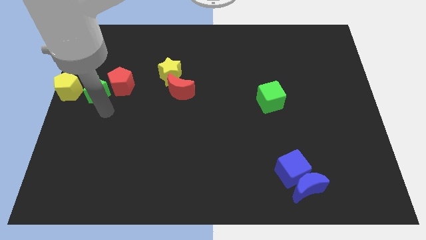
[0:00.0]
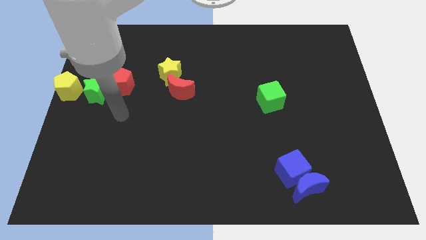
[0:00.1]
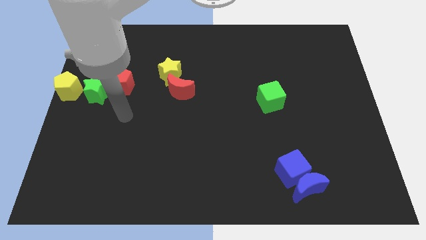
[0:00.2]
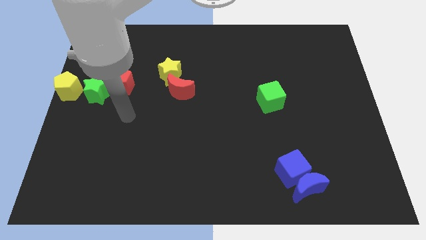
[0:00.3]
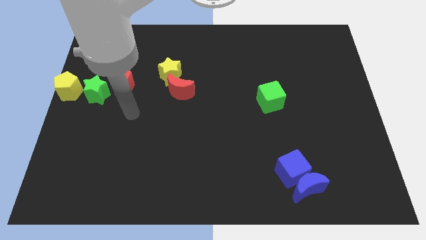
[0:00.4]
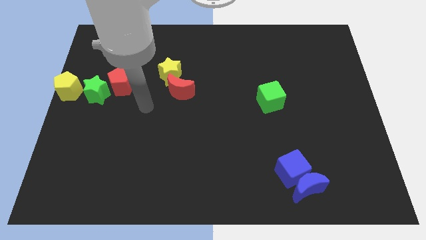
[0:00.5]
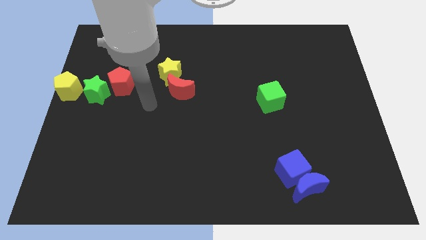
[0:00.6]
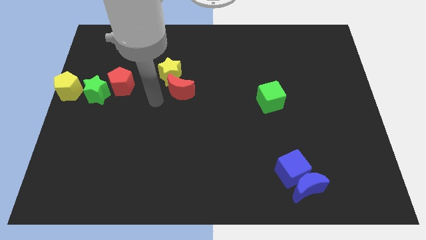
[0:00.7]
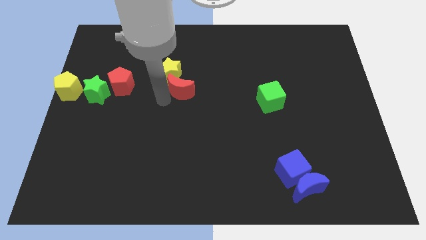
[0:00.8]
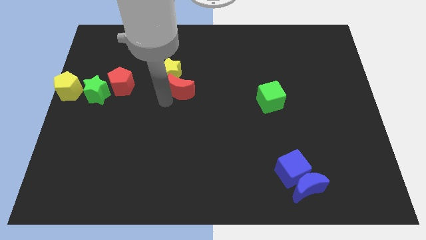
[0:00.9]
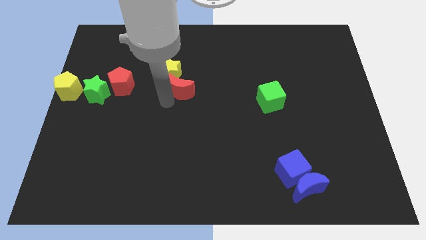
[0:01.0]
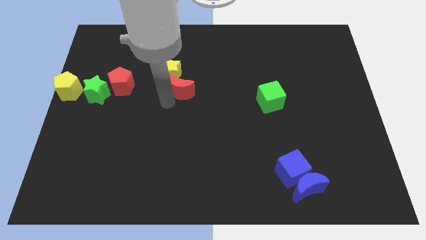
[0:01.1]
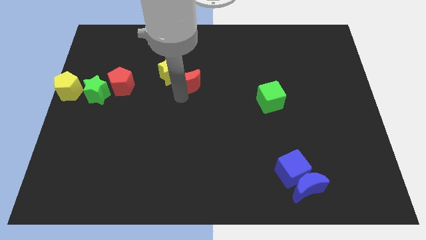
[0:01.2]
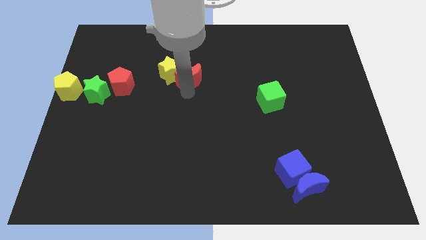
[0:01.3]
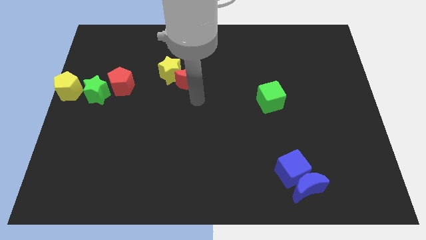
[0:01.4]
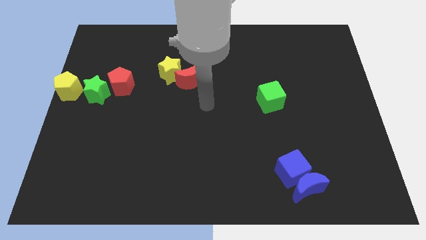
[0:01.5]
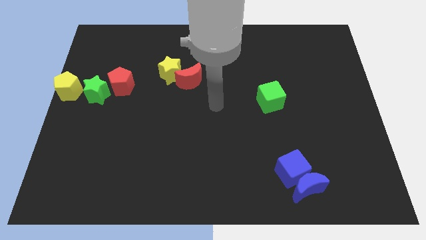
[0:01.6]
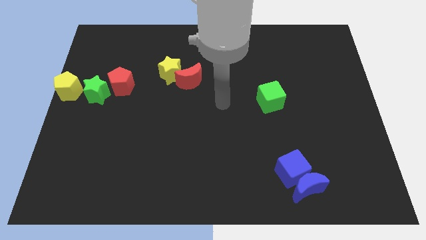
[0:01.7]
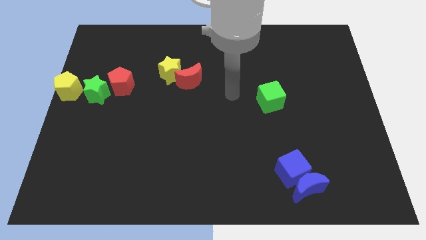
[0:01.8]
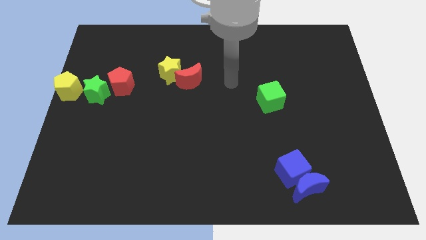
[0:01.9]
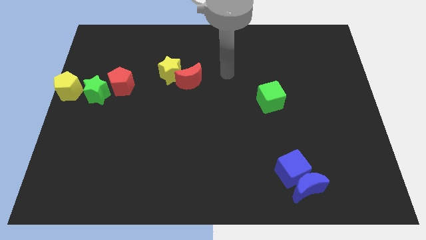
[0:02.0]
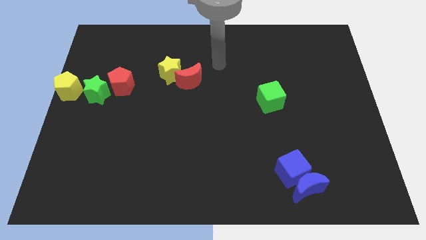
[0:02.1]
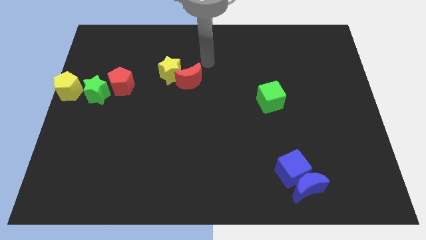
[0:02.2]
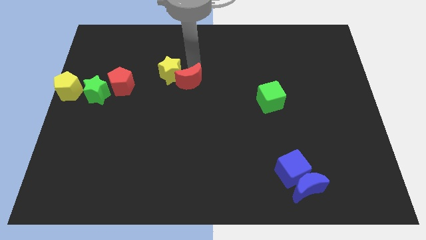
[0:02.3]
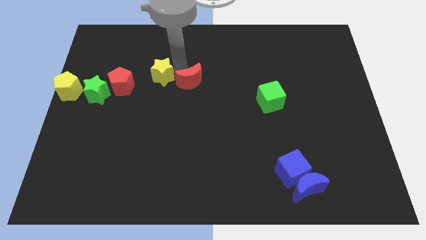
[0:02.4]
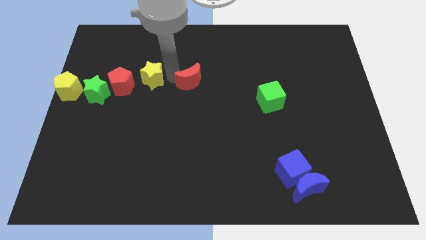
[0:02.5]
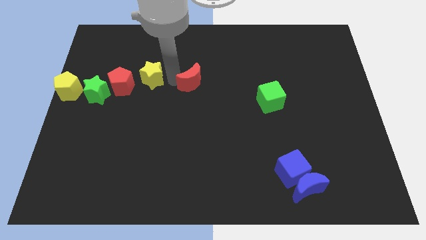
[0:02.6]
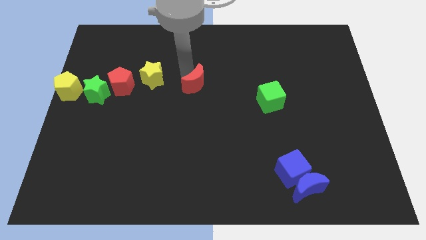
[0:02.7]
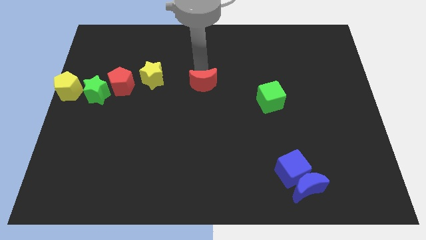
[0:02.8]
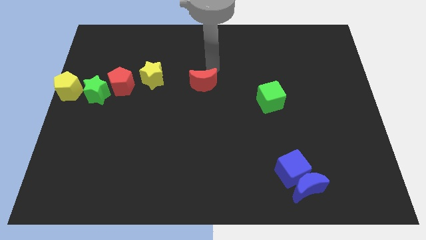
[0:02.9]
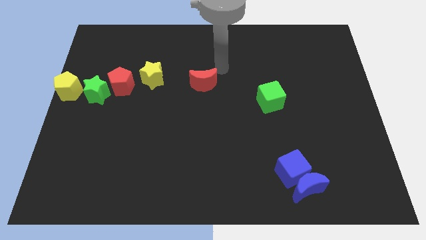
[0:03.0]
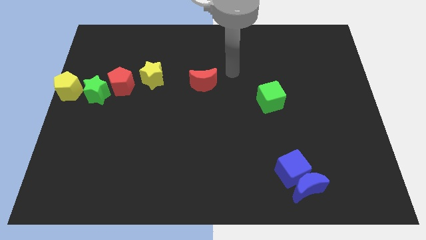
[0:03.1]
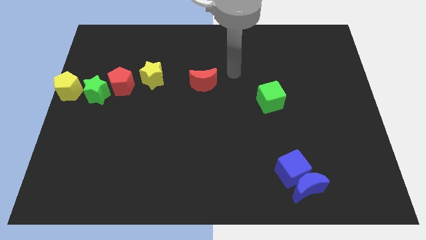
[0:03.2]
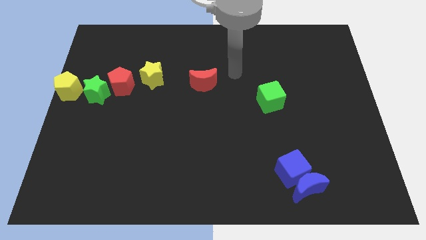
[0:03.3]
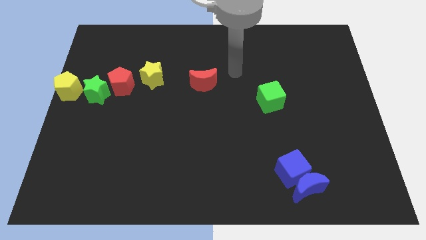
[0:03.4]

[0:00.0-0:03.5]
separate the yellow star and red moon

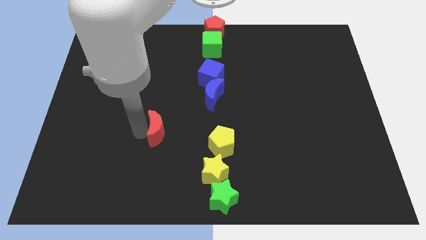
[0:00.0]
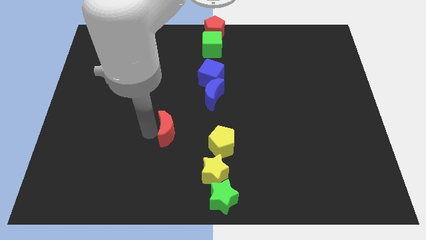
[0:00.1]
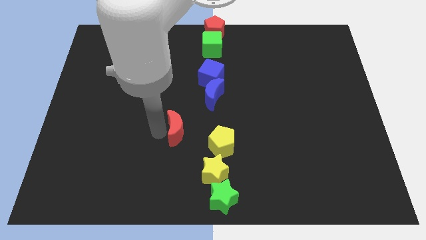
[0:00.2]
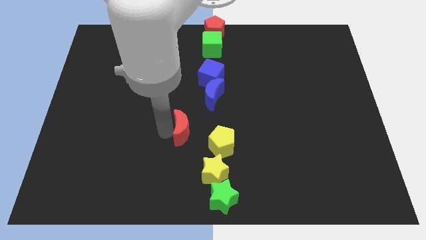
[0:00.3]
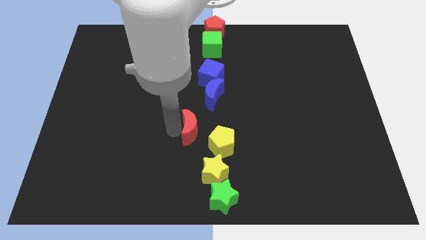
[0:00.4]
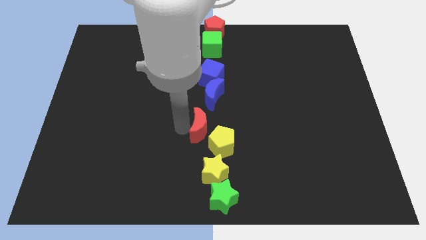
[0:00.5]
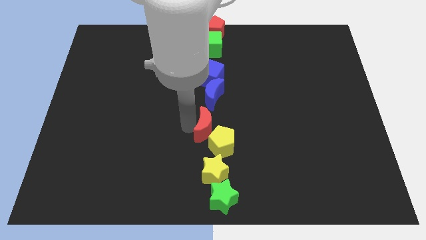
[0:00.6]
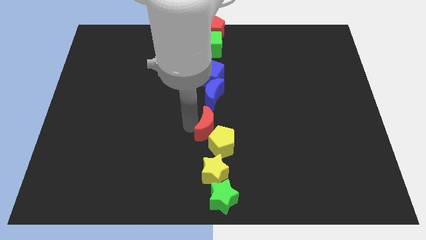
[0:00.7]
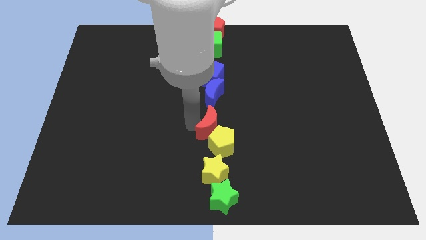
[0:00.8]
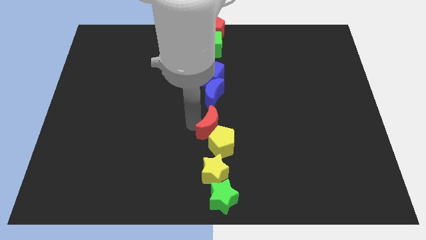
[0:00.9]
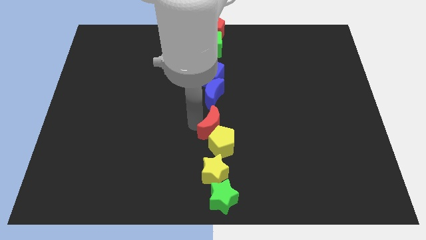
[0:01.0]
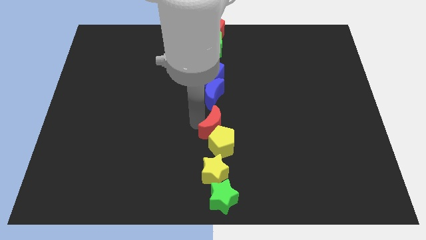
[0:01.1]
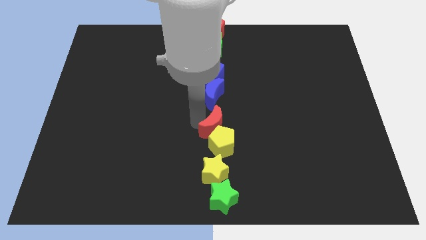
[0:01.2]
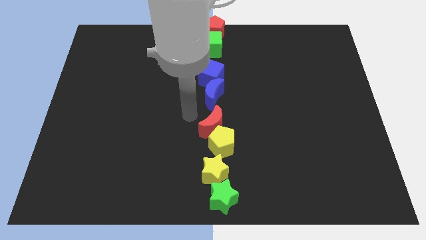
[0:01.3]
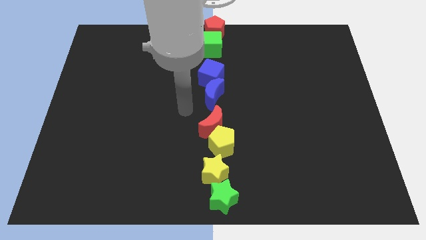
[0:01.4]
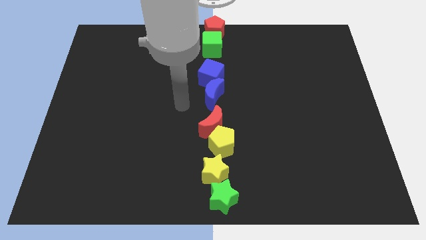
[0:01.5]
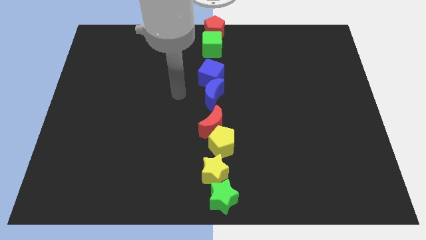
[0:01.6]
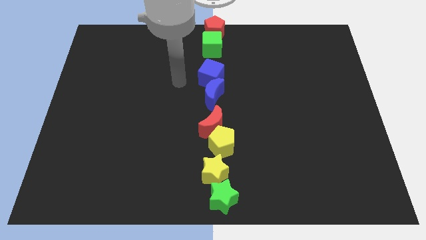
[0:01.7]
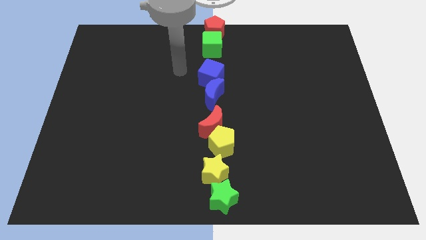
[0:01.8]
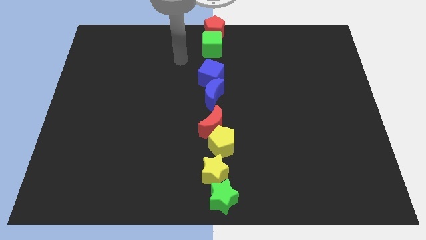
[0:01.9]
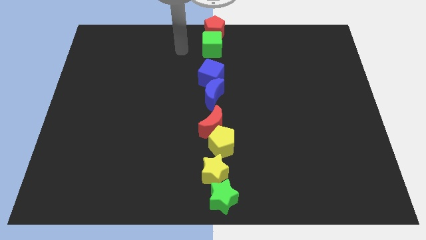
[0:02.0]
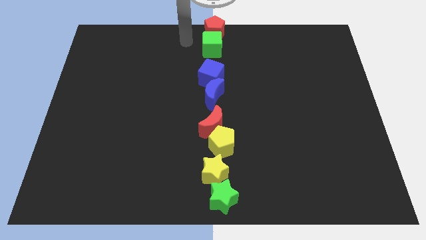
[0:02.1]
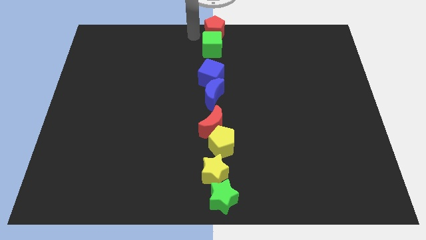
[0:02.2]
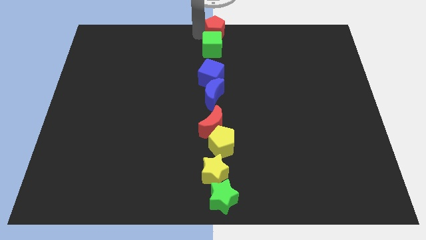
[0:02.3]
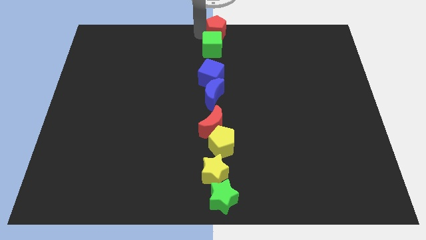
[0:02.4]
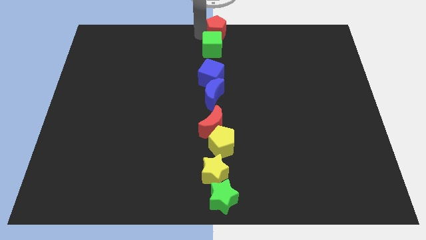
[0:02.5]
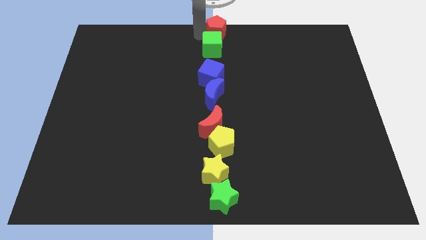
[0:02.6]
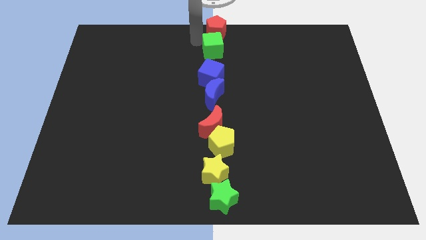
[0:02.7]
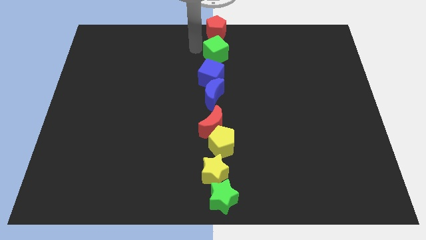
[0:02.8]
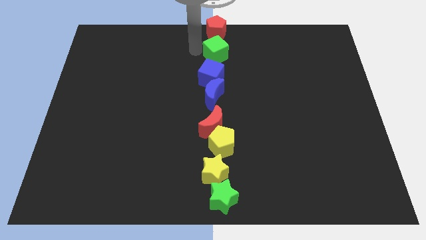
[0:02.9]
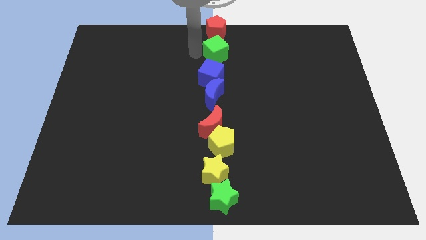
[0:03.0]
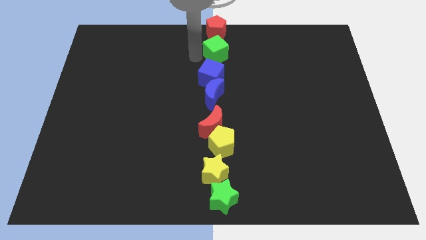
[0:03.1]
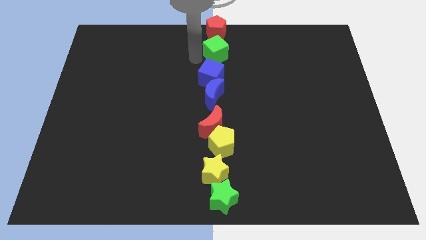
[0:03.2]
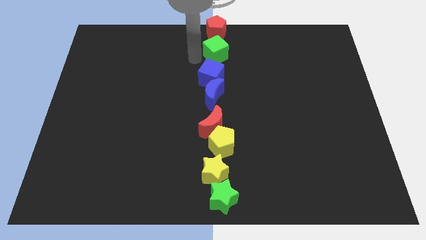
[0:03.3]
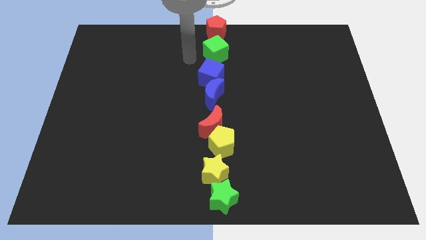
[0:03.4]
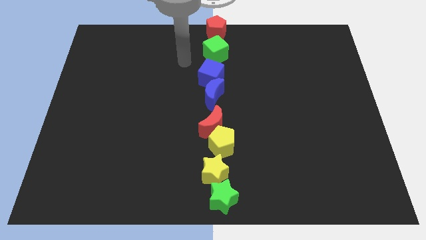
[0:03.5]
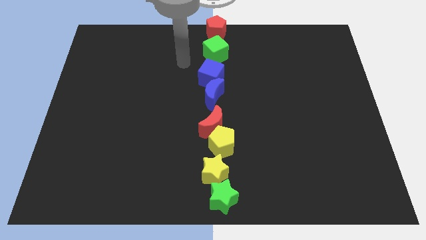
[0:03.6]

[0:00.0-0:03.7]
adjust the red crescent and the green cube to form a vertical line with a group of blocks

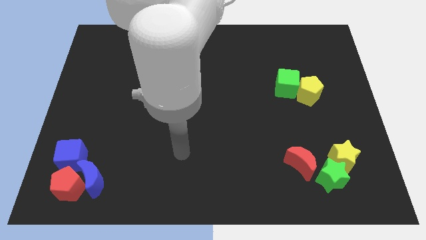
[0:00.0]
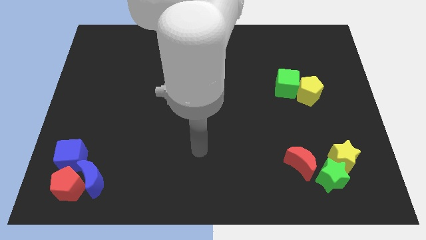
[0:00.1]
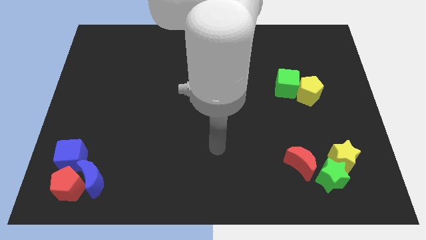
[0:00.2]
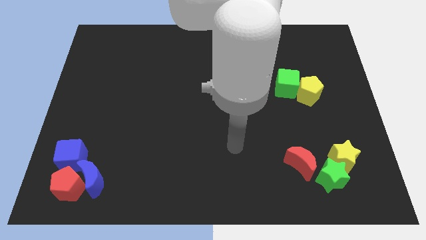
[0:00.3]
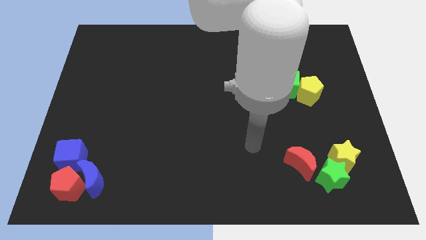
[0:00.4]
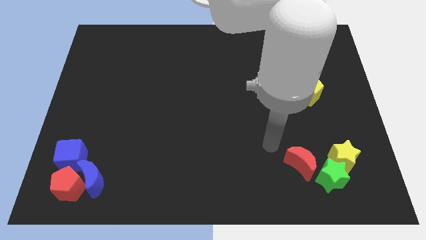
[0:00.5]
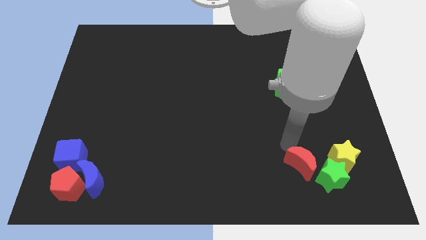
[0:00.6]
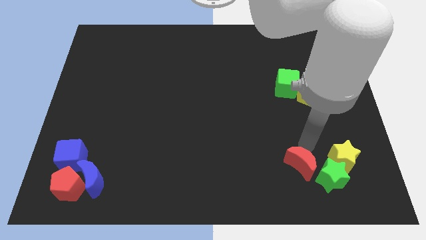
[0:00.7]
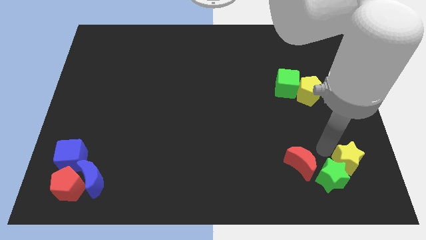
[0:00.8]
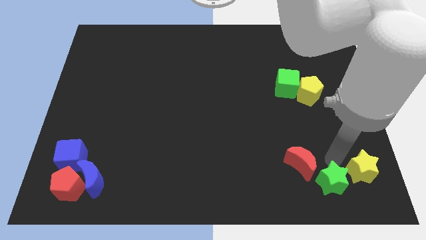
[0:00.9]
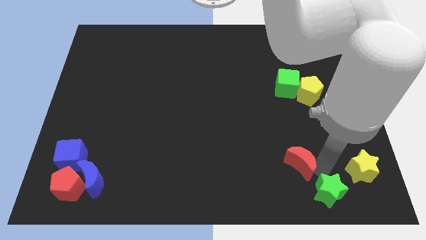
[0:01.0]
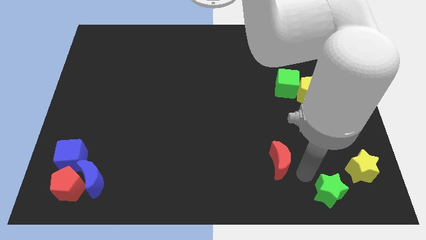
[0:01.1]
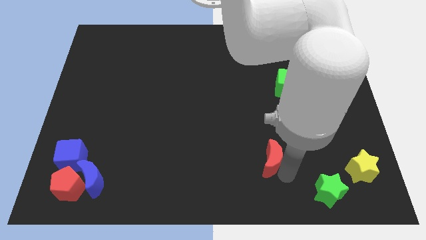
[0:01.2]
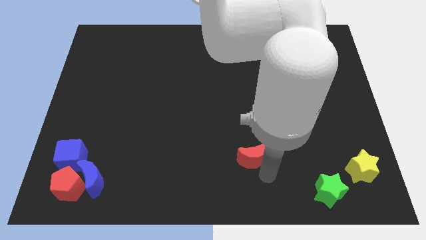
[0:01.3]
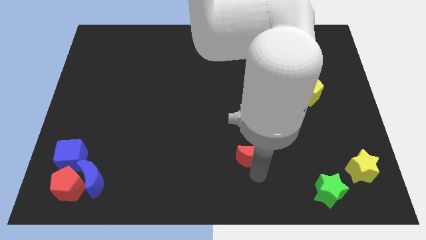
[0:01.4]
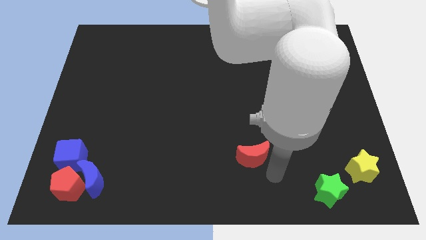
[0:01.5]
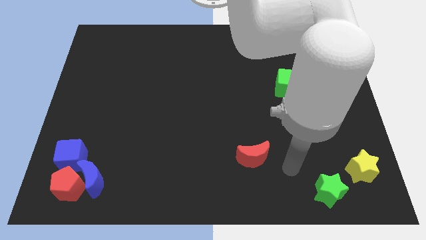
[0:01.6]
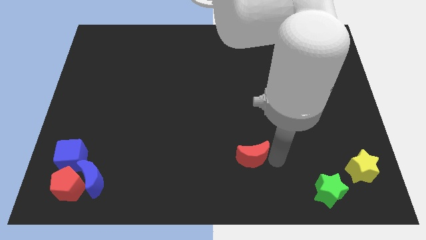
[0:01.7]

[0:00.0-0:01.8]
separate the red moon from green and yellow star
